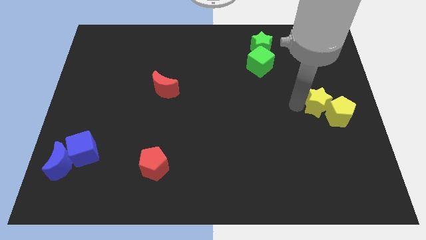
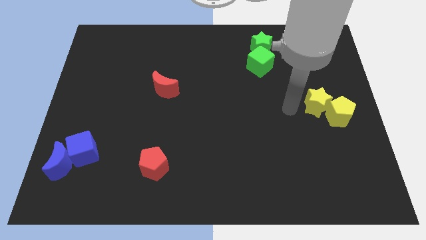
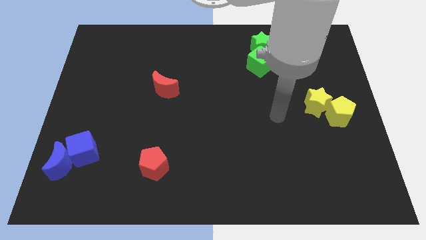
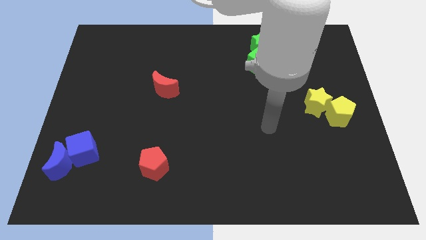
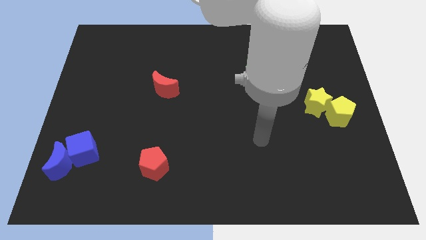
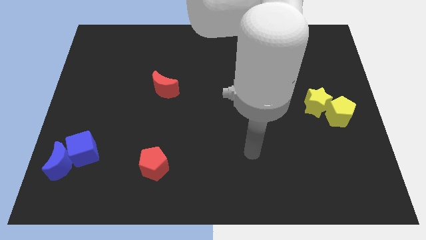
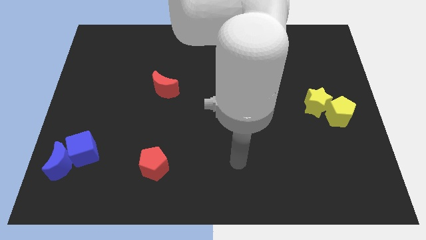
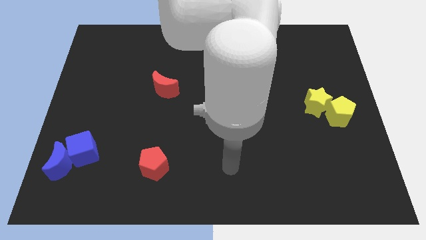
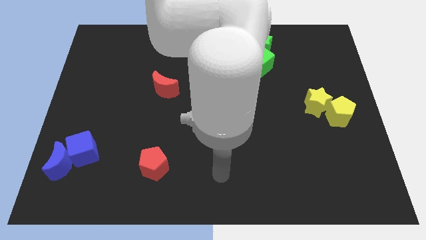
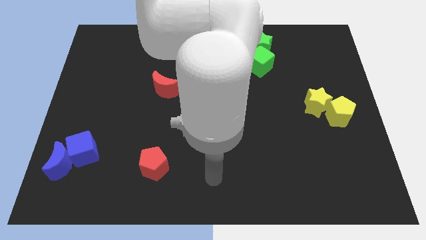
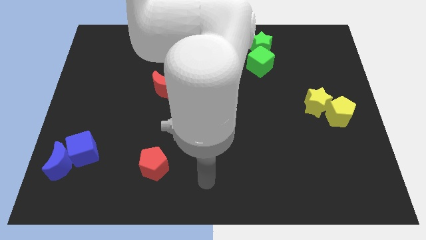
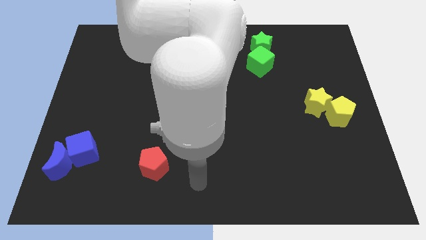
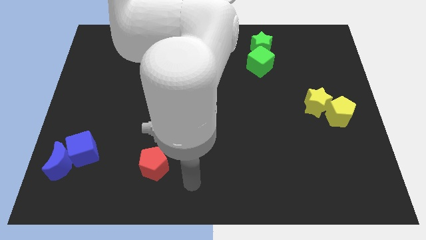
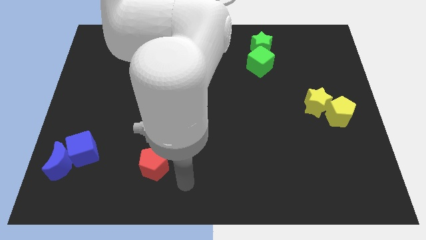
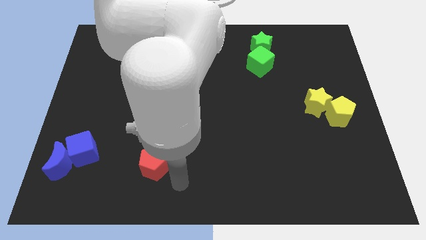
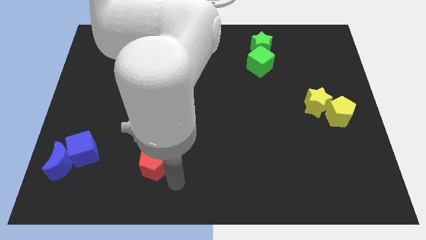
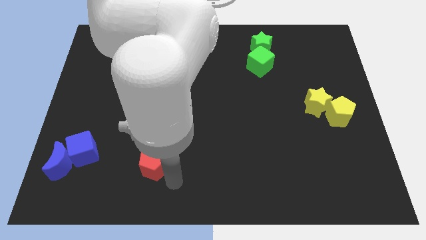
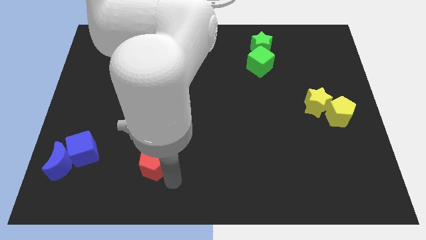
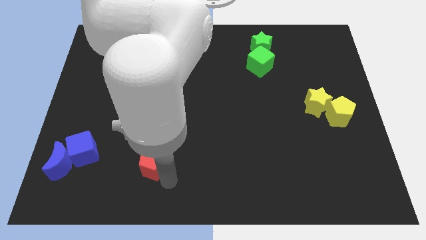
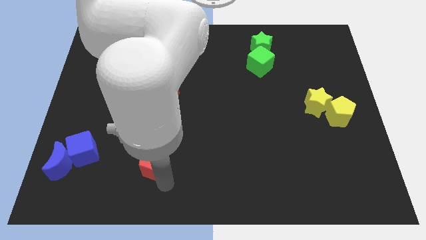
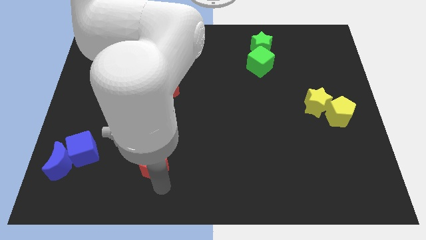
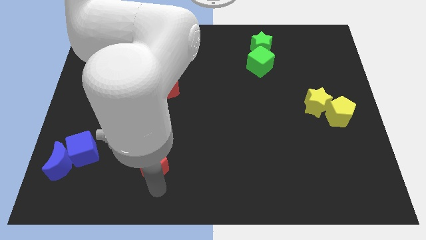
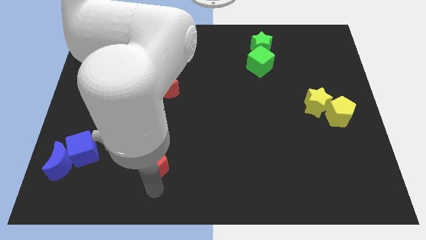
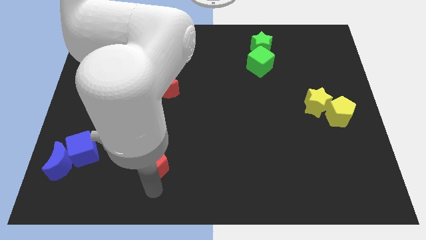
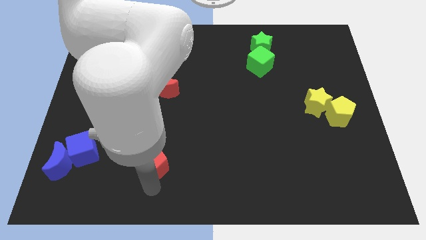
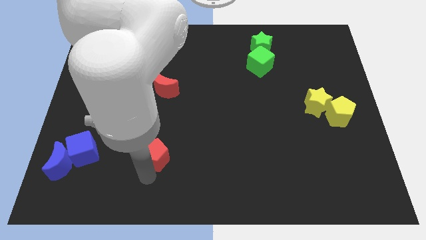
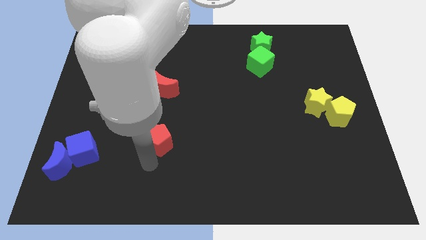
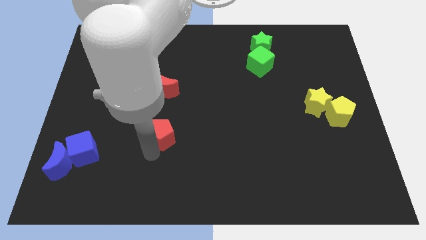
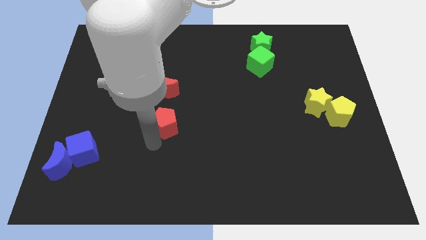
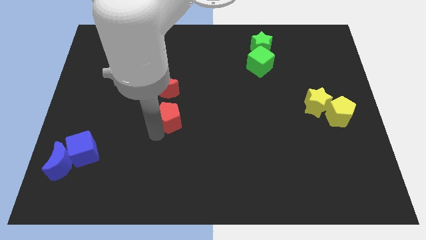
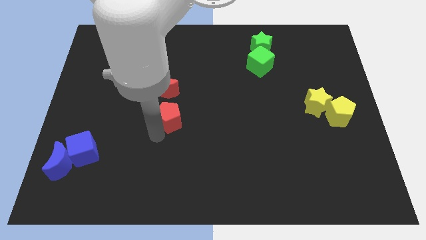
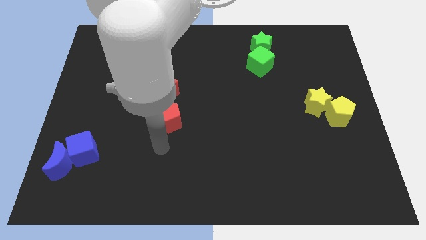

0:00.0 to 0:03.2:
place the red pentagon right to the blue cube

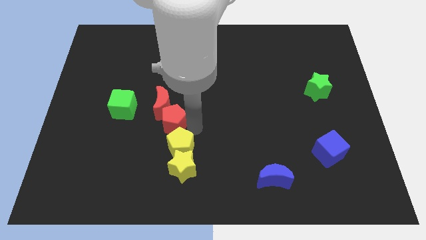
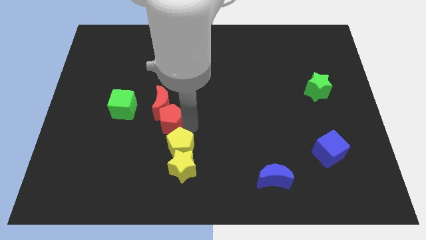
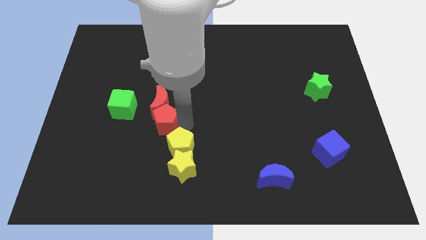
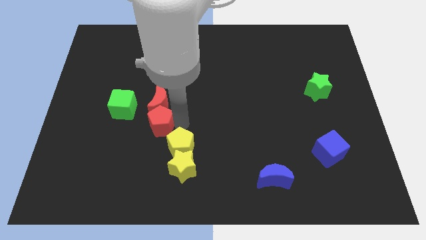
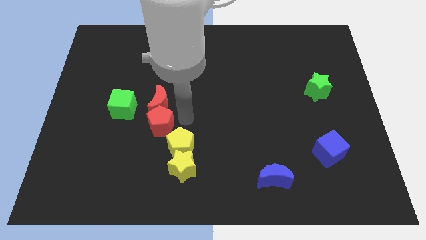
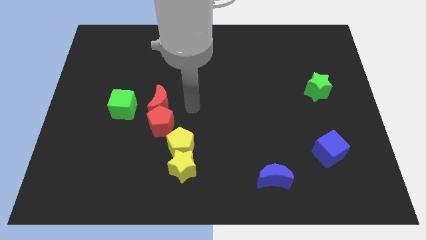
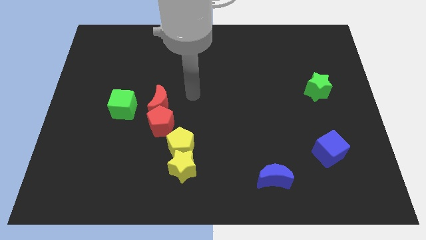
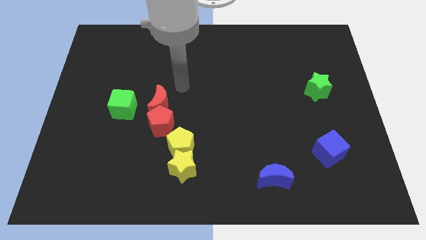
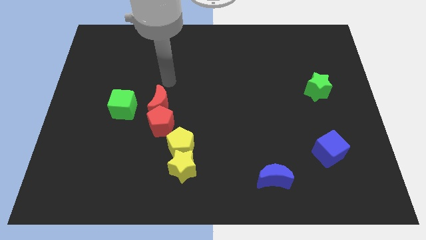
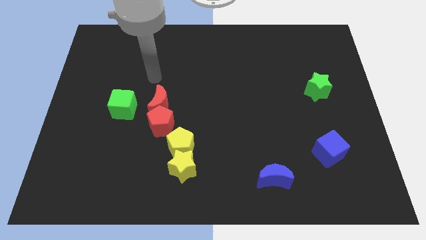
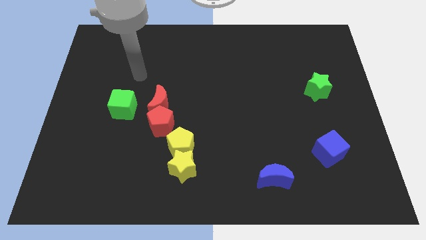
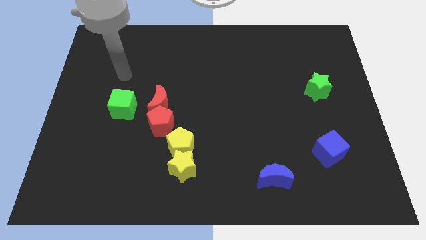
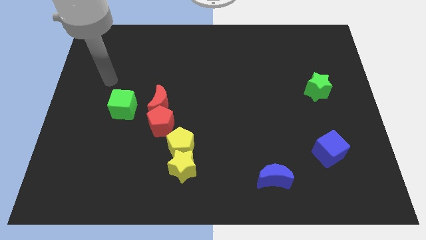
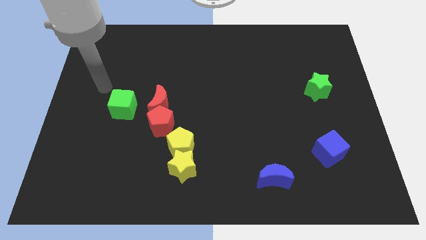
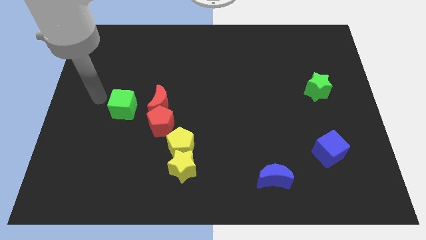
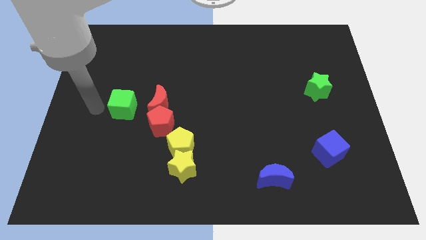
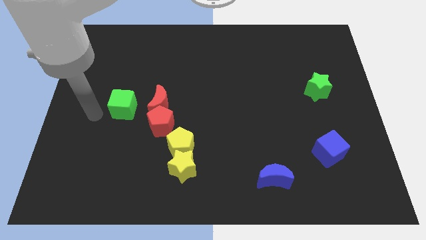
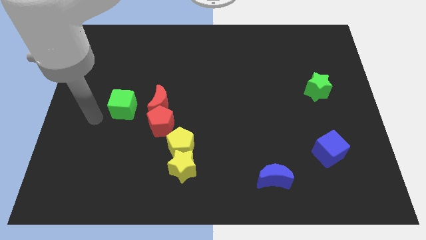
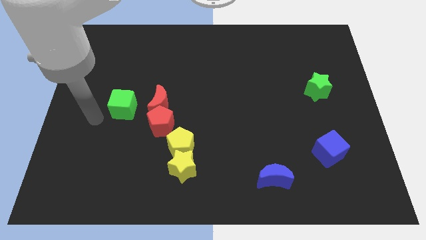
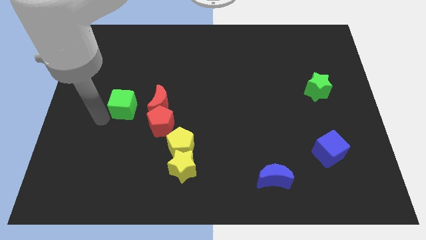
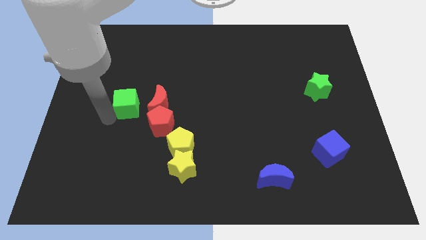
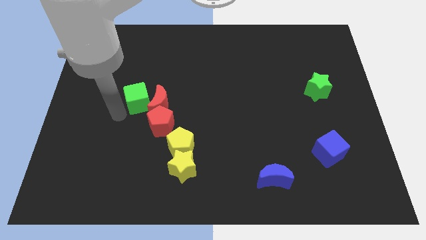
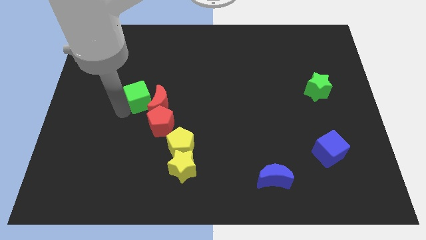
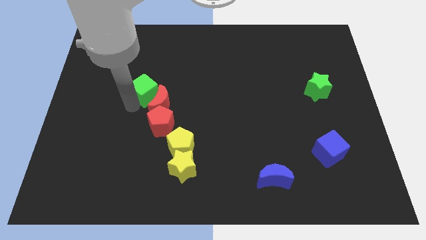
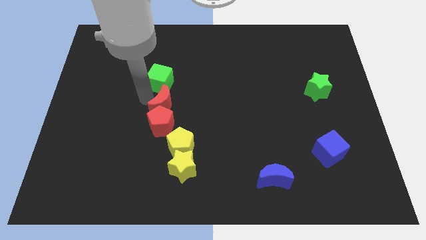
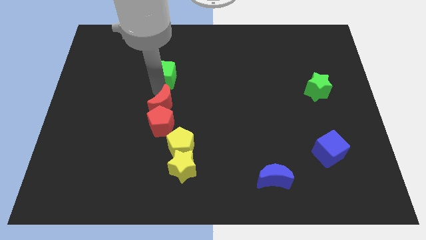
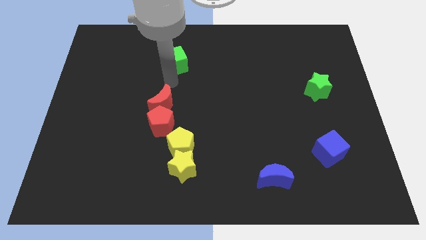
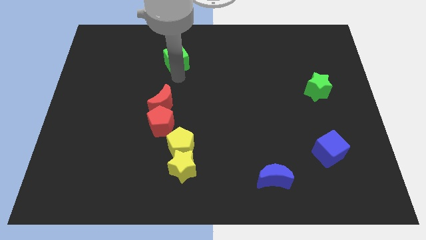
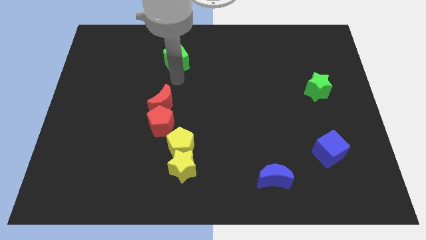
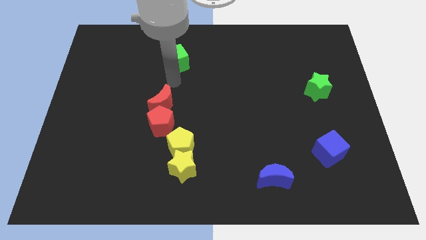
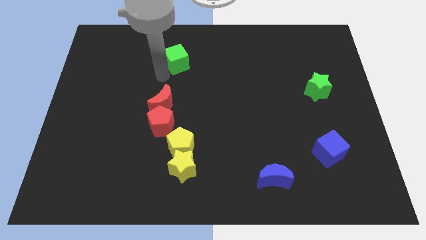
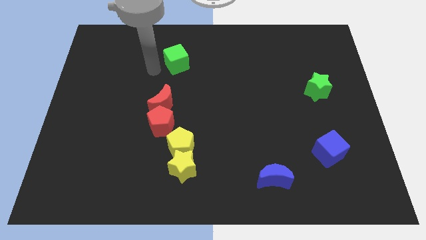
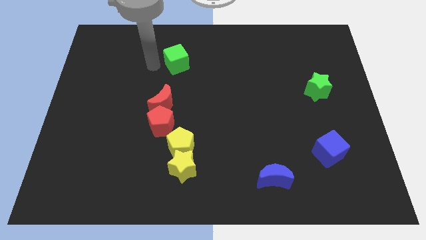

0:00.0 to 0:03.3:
move the green block towards the top center

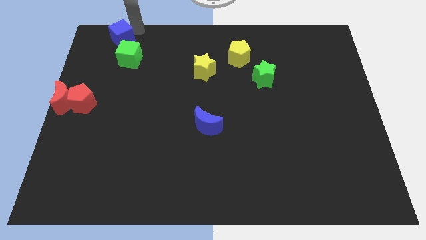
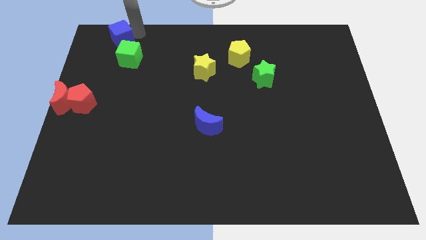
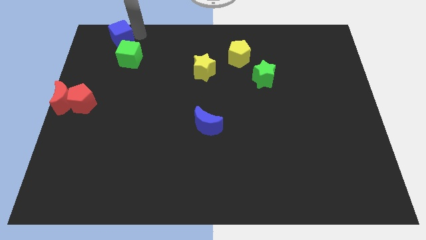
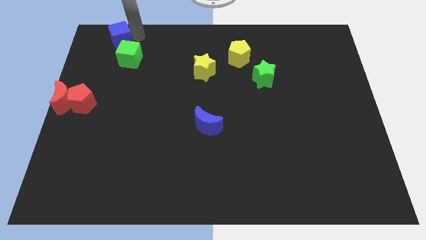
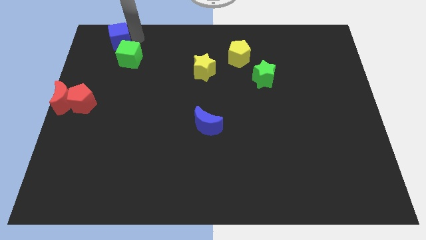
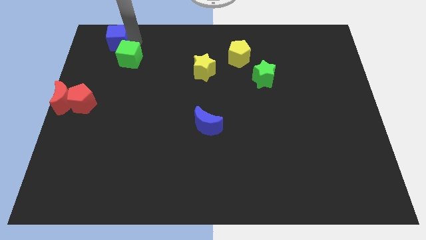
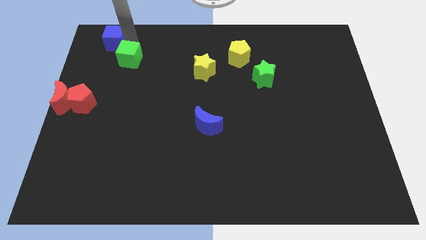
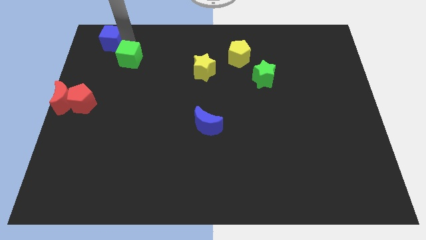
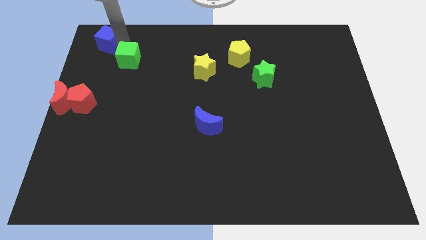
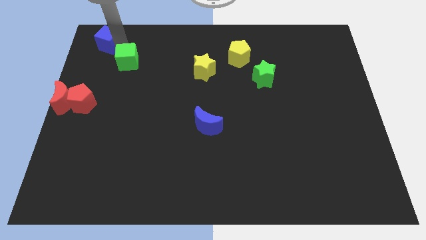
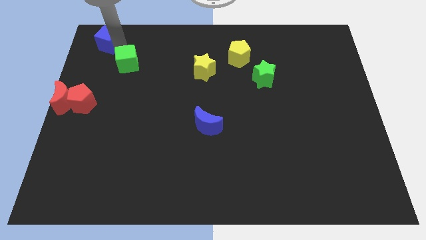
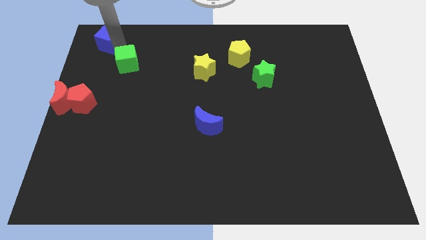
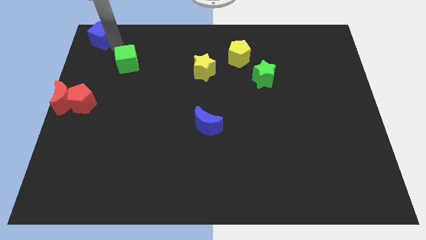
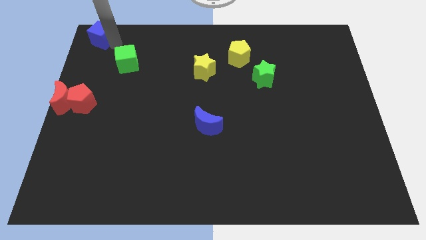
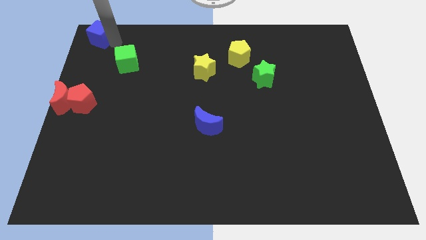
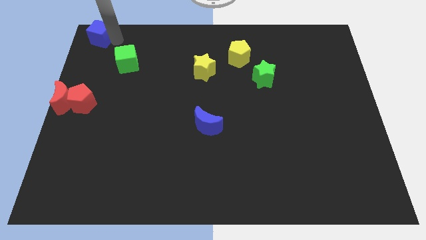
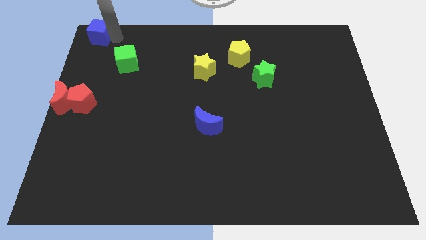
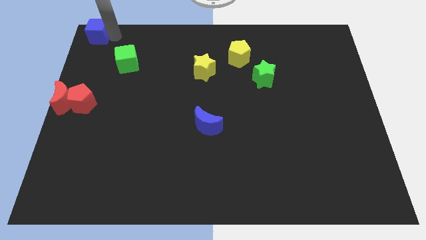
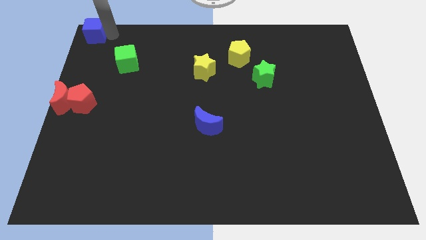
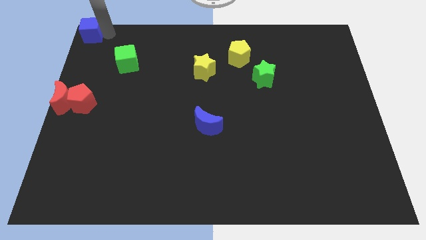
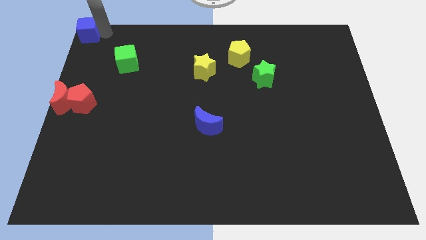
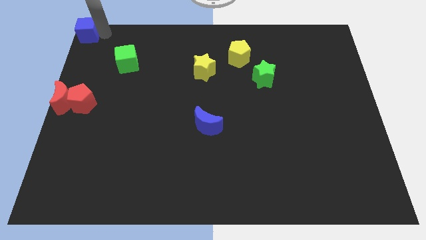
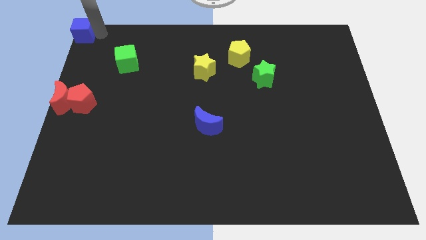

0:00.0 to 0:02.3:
move the blue cube to the top left corner of the board

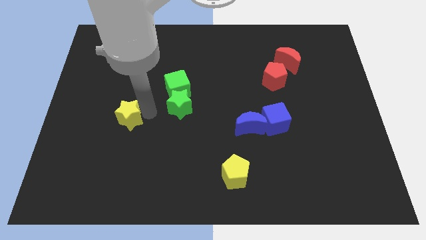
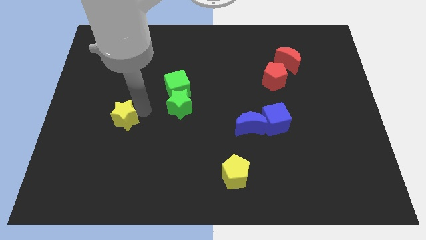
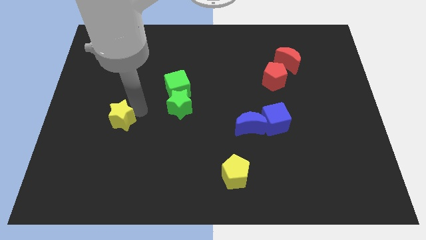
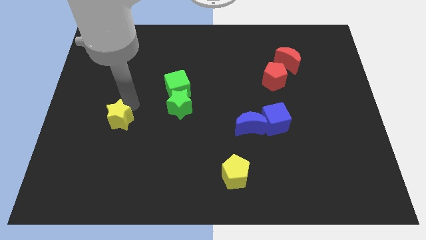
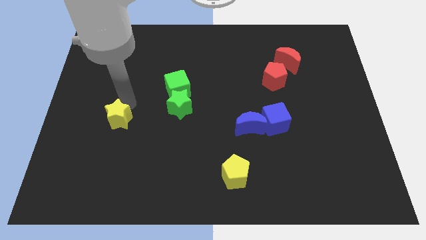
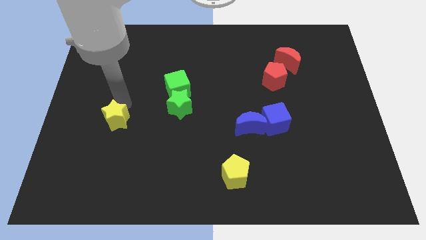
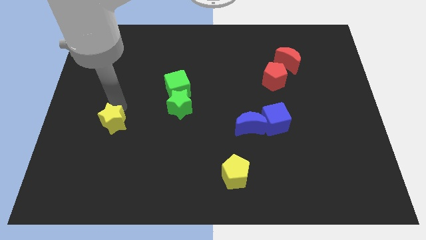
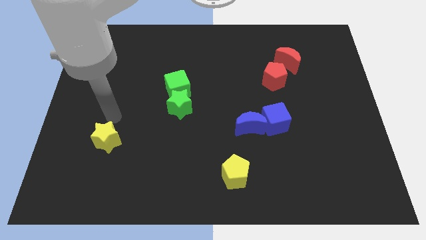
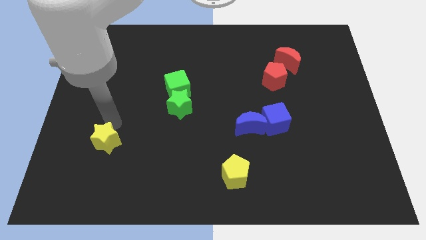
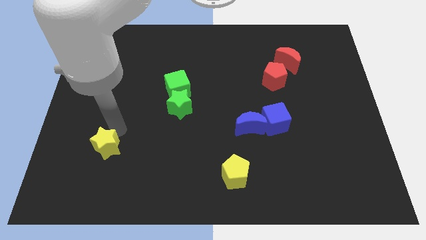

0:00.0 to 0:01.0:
push yellow star slightly towards the down
